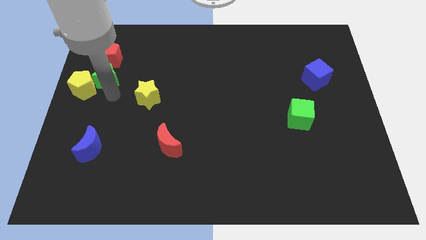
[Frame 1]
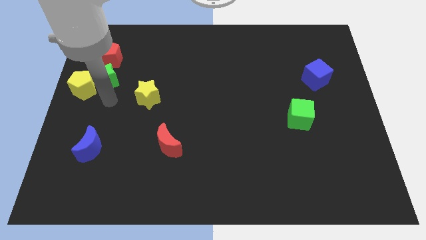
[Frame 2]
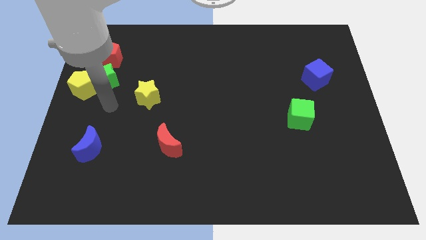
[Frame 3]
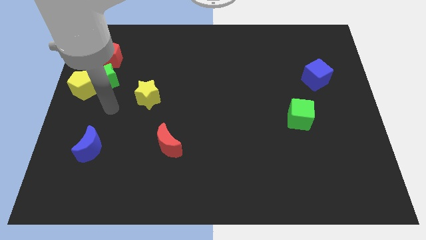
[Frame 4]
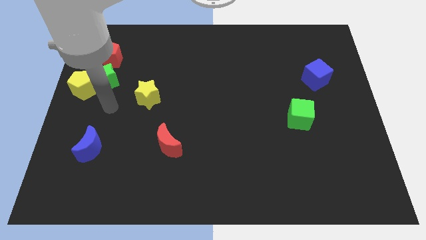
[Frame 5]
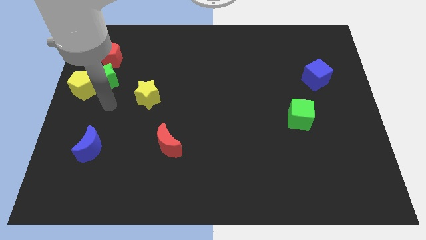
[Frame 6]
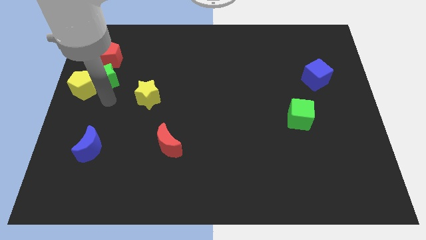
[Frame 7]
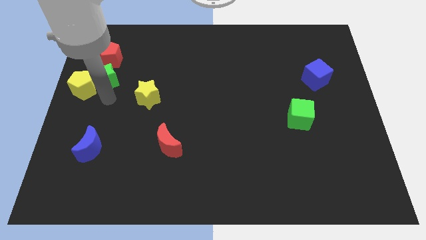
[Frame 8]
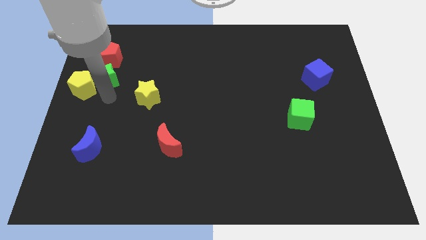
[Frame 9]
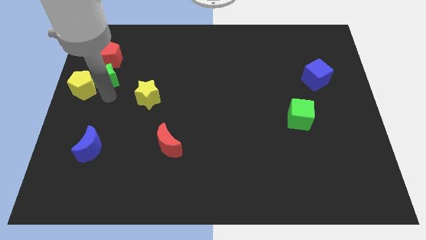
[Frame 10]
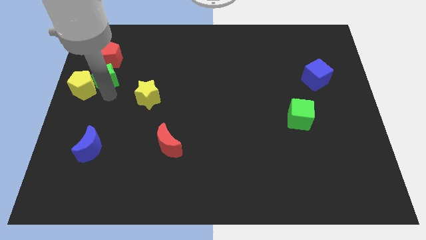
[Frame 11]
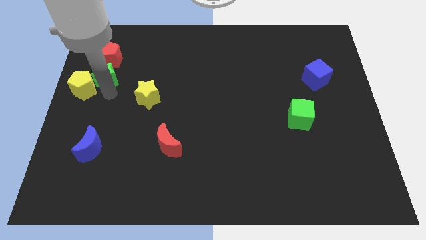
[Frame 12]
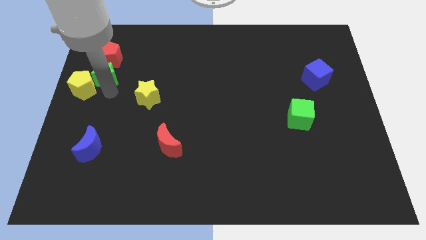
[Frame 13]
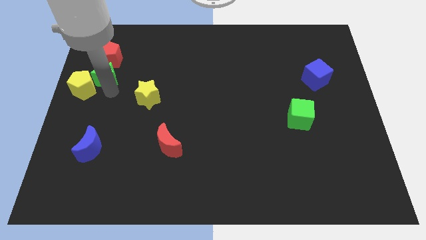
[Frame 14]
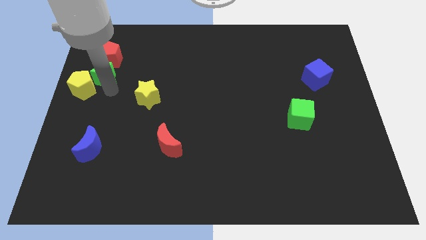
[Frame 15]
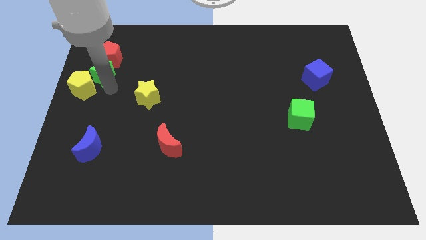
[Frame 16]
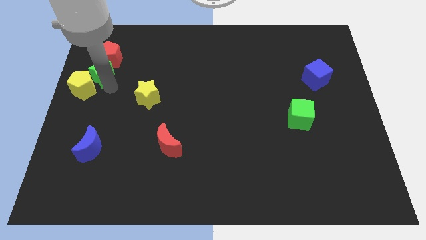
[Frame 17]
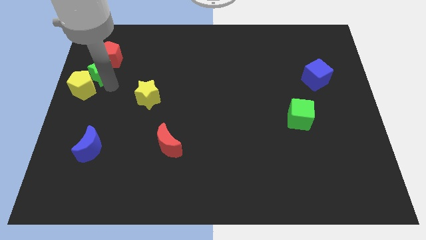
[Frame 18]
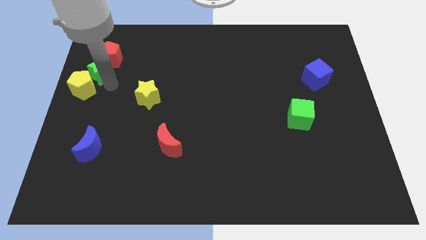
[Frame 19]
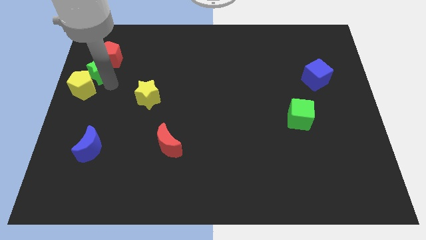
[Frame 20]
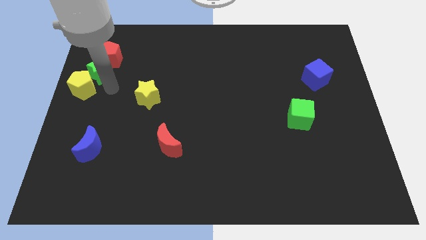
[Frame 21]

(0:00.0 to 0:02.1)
insert the green star in between the red pentagon and yellow pentagon

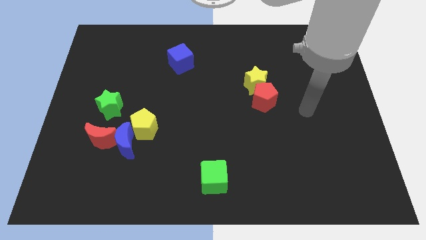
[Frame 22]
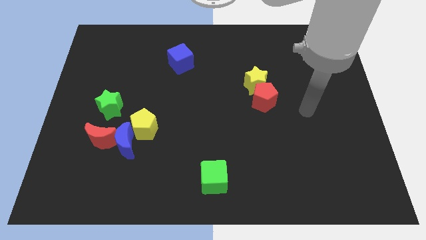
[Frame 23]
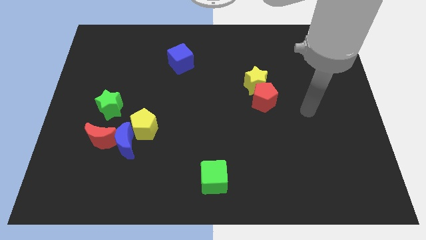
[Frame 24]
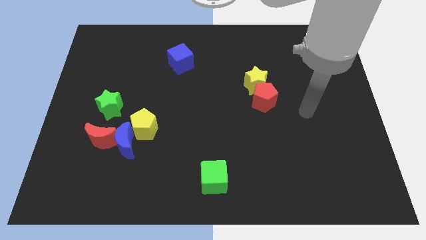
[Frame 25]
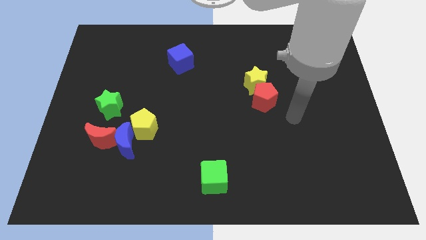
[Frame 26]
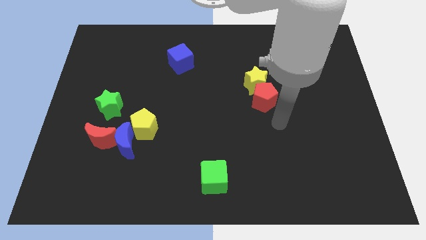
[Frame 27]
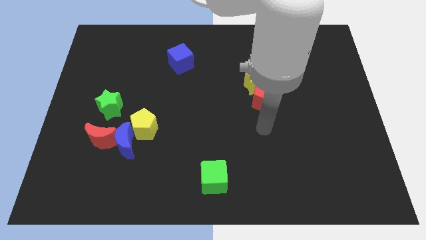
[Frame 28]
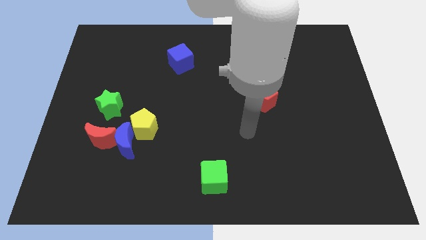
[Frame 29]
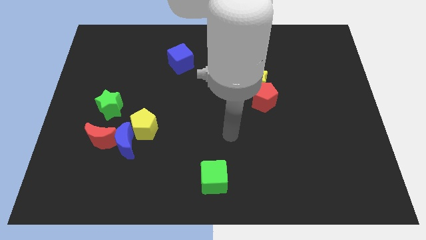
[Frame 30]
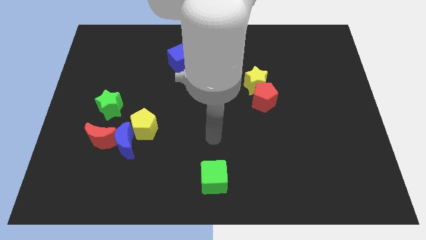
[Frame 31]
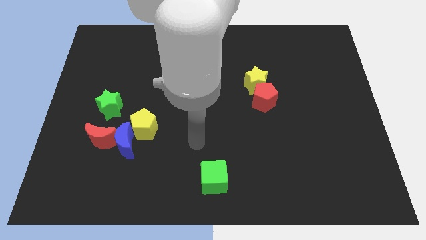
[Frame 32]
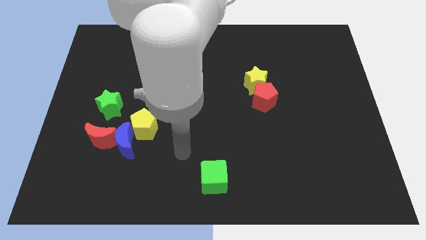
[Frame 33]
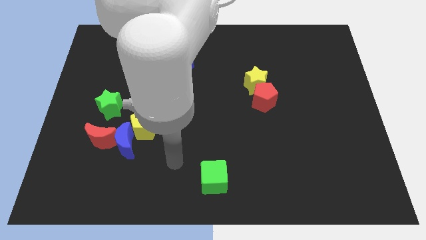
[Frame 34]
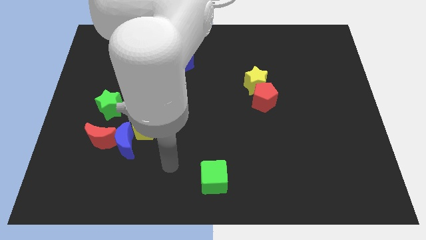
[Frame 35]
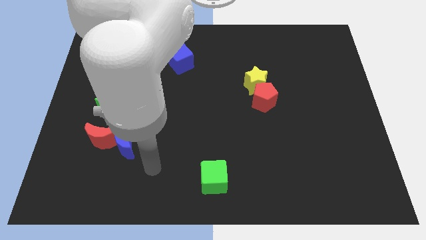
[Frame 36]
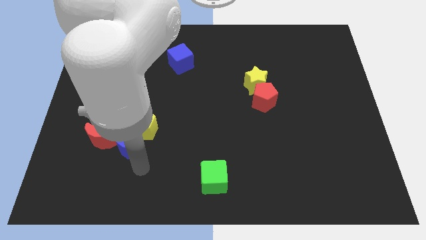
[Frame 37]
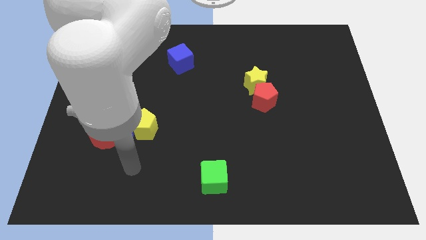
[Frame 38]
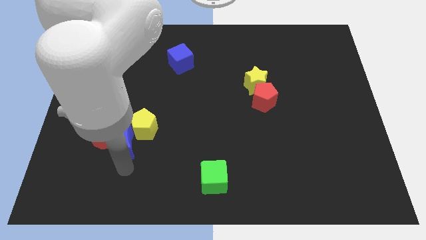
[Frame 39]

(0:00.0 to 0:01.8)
point your arm to the bottom of the blue crescent

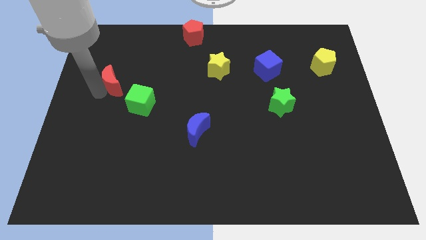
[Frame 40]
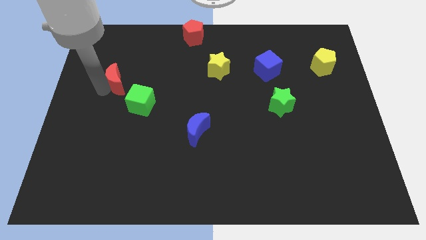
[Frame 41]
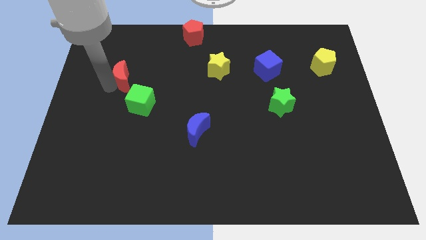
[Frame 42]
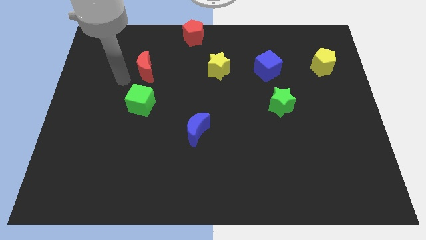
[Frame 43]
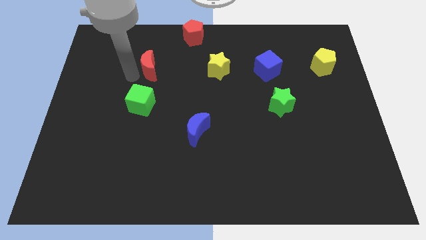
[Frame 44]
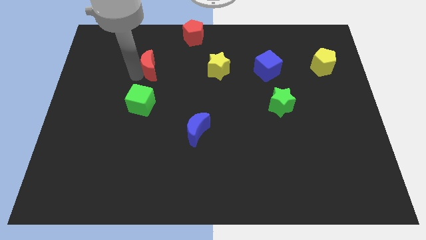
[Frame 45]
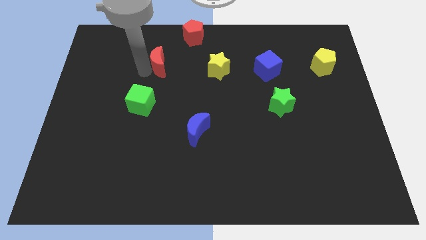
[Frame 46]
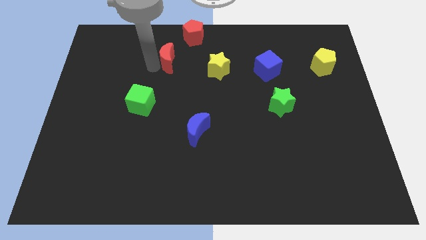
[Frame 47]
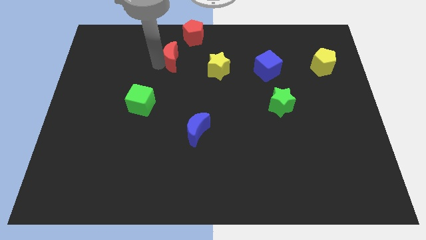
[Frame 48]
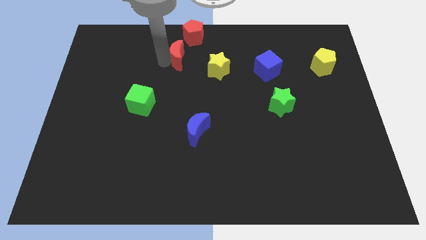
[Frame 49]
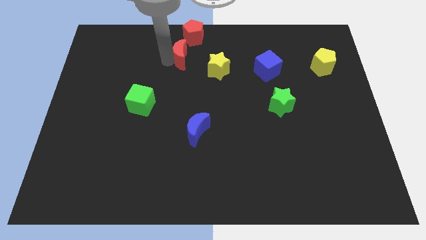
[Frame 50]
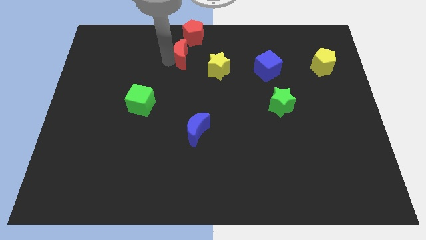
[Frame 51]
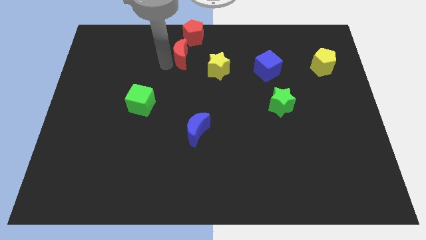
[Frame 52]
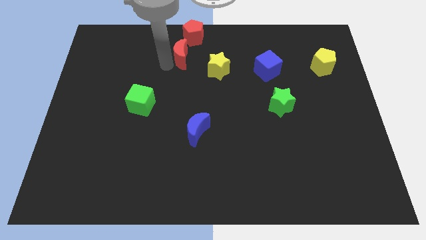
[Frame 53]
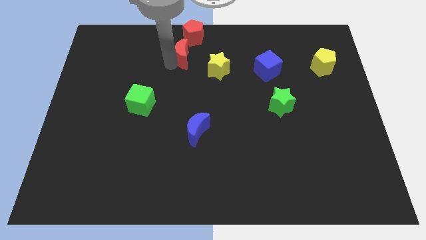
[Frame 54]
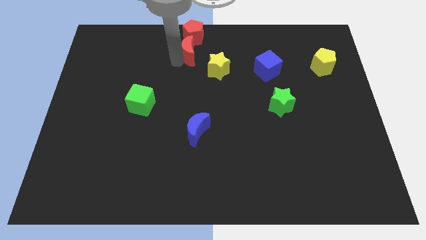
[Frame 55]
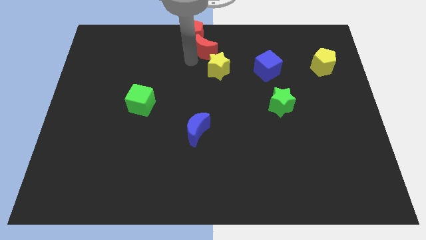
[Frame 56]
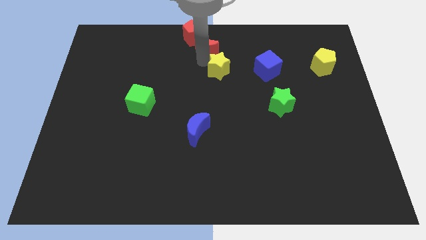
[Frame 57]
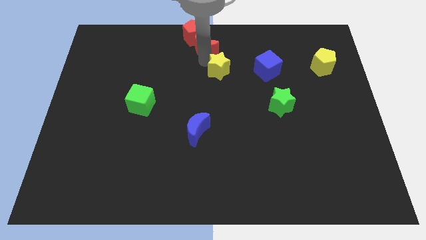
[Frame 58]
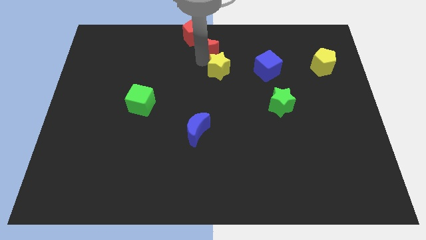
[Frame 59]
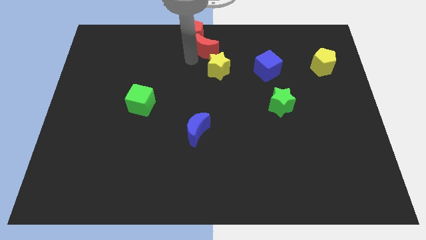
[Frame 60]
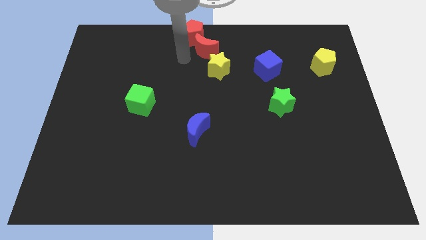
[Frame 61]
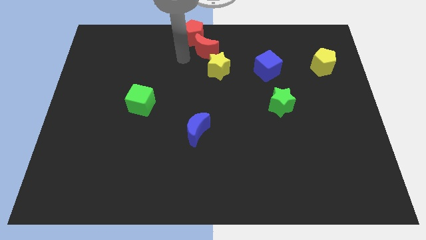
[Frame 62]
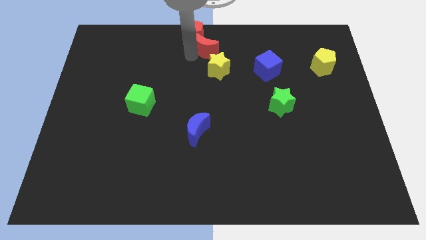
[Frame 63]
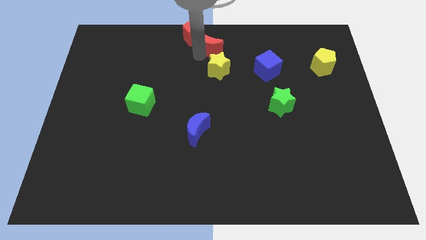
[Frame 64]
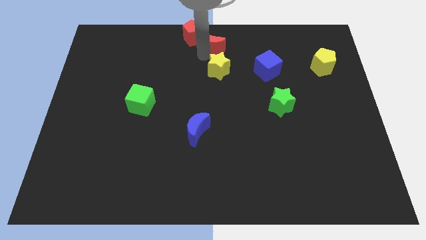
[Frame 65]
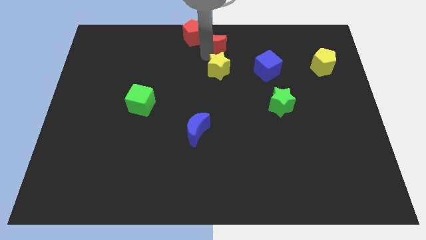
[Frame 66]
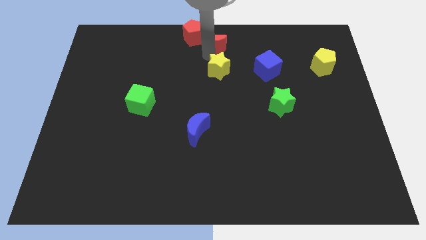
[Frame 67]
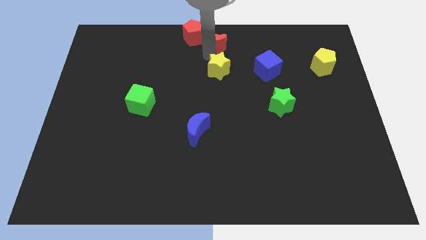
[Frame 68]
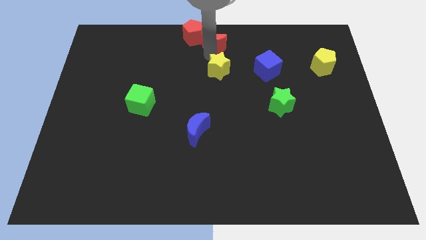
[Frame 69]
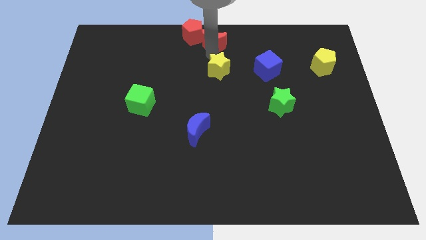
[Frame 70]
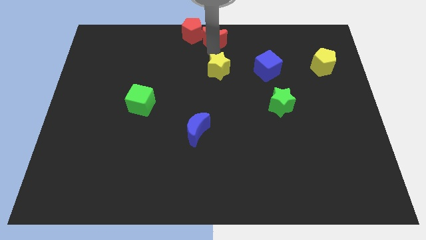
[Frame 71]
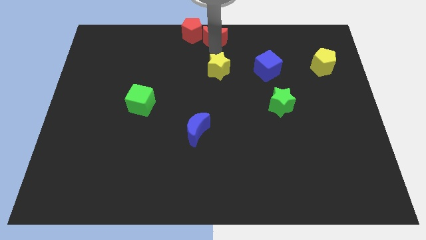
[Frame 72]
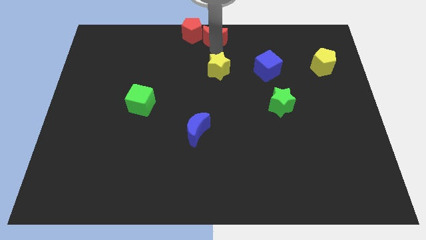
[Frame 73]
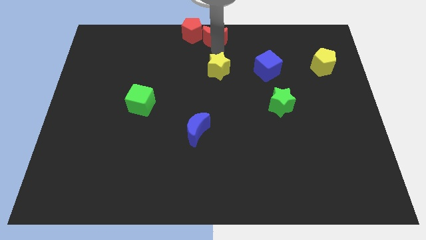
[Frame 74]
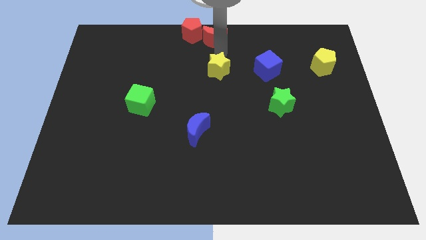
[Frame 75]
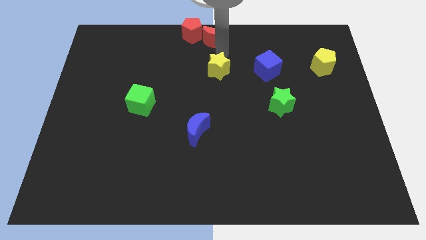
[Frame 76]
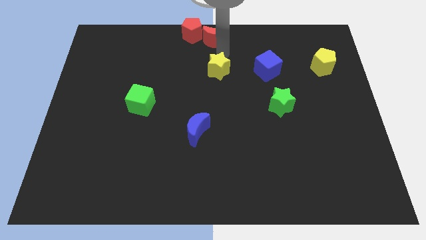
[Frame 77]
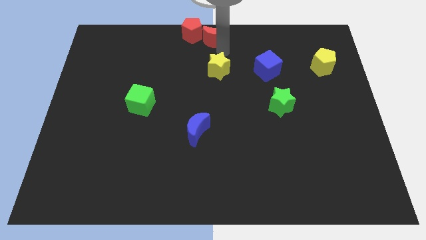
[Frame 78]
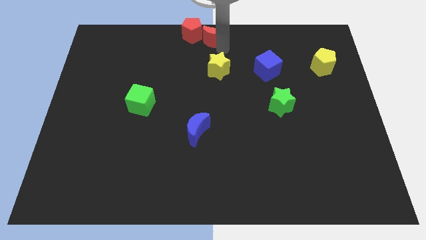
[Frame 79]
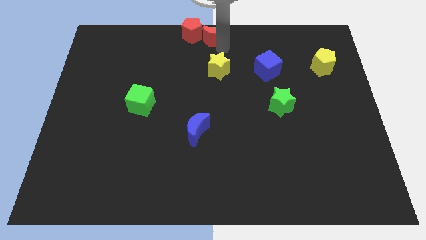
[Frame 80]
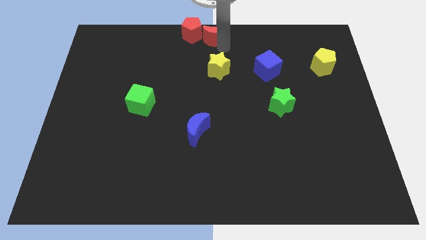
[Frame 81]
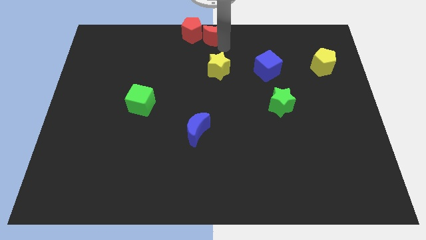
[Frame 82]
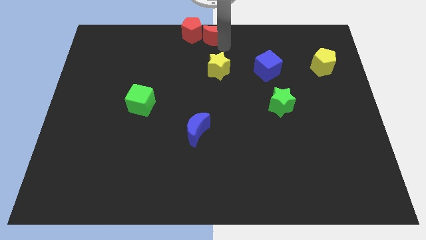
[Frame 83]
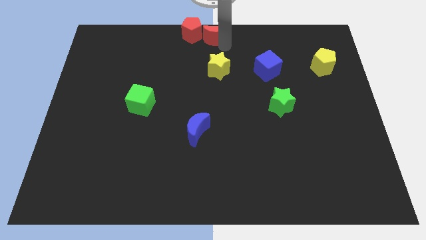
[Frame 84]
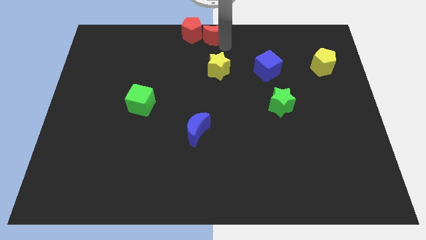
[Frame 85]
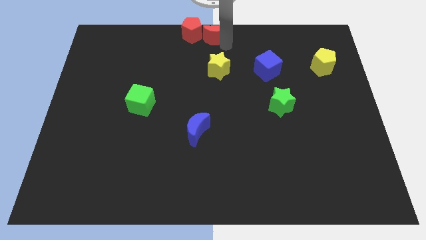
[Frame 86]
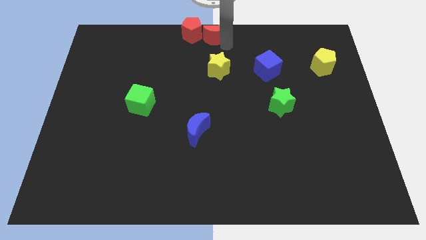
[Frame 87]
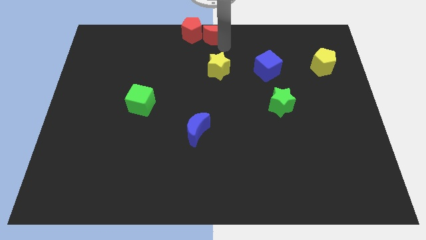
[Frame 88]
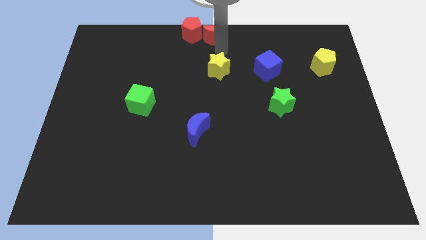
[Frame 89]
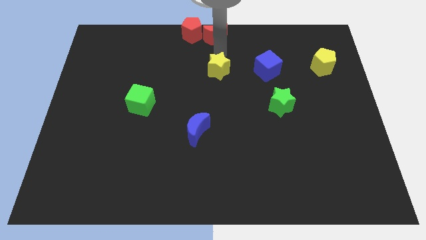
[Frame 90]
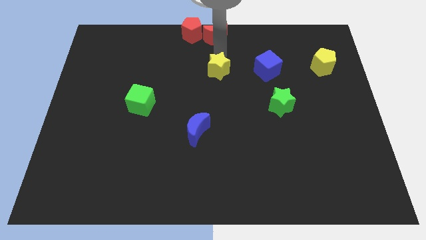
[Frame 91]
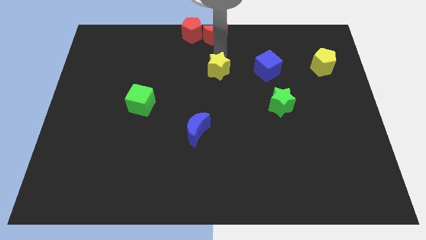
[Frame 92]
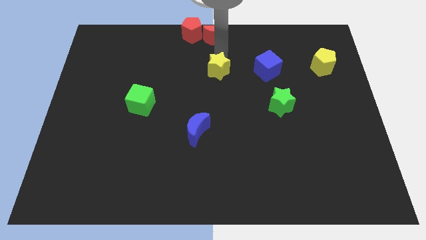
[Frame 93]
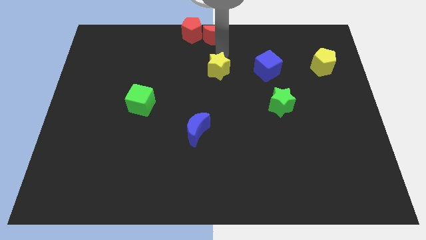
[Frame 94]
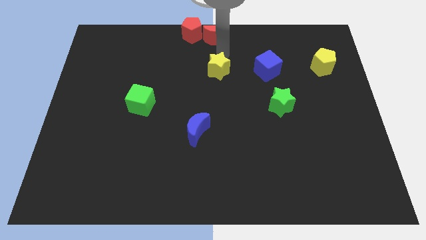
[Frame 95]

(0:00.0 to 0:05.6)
move the red crescent right beside the red pentagon
